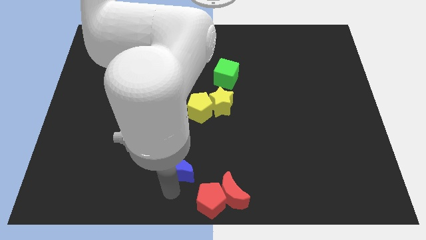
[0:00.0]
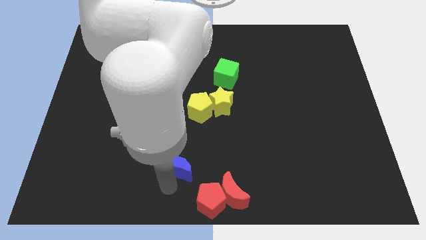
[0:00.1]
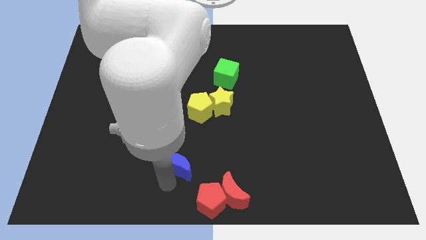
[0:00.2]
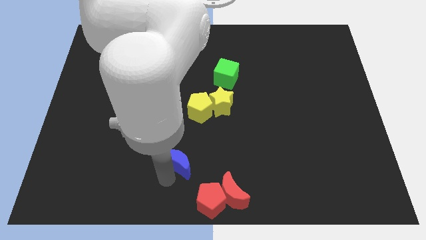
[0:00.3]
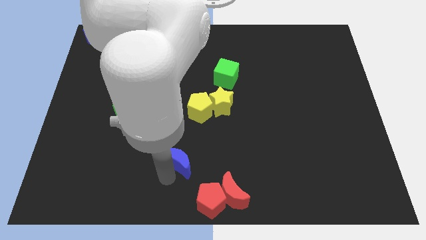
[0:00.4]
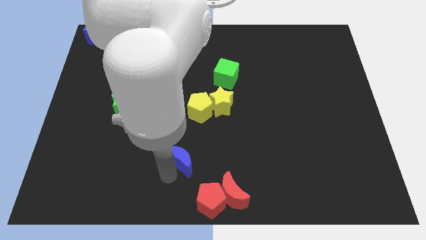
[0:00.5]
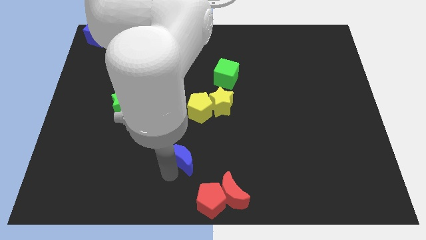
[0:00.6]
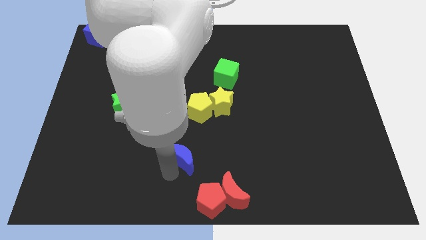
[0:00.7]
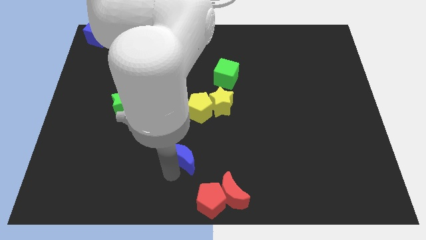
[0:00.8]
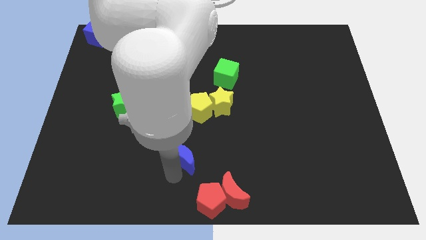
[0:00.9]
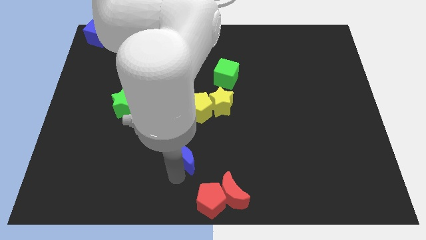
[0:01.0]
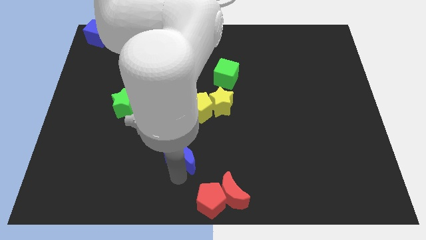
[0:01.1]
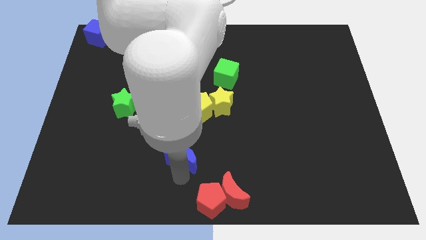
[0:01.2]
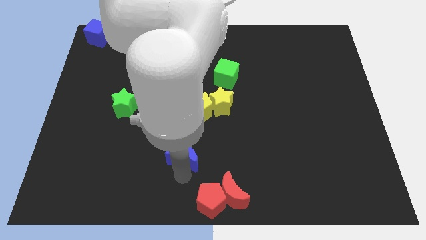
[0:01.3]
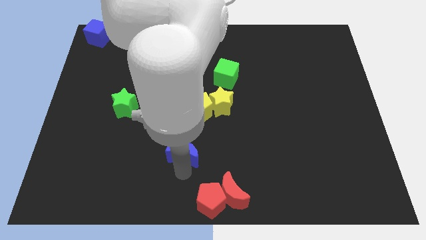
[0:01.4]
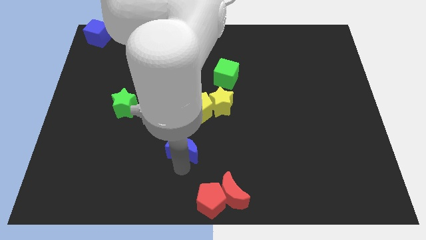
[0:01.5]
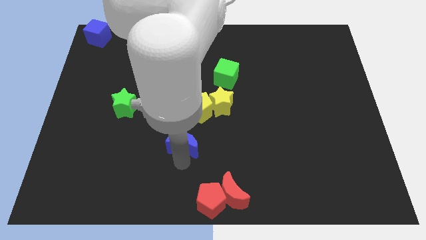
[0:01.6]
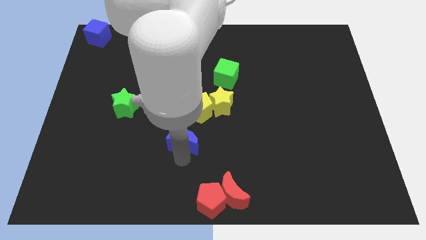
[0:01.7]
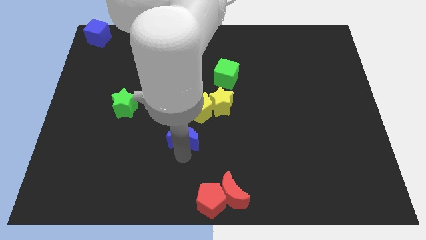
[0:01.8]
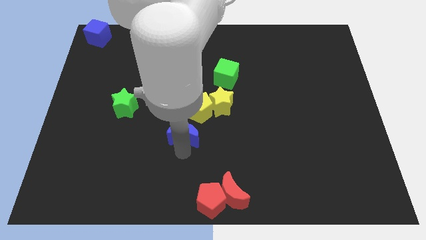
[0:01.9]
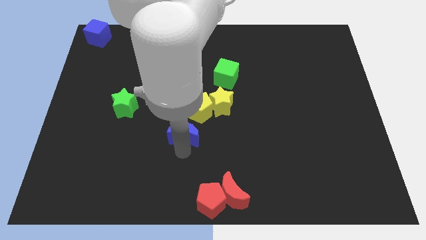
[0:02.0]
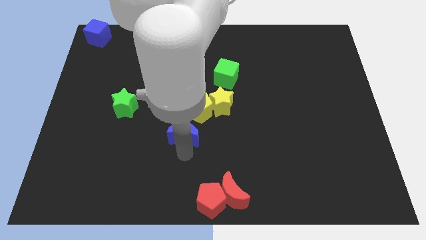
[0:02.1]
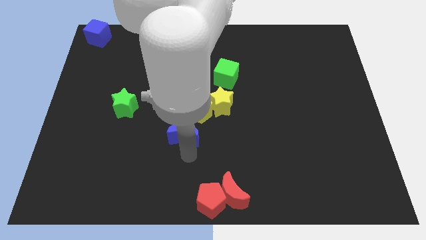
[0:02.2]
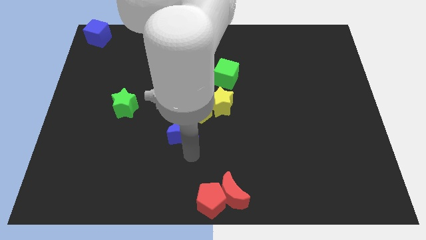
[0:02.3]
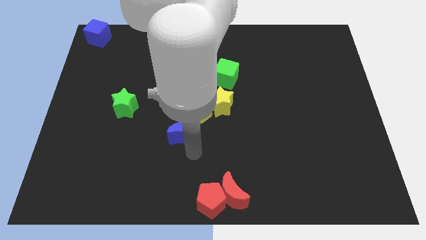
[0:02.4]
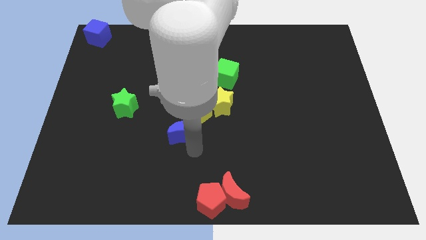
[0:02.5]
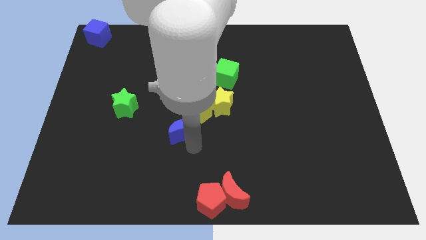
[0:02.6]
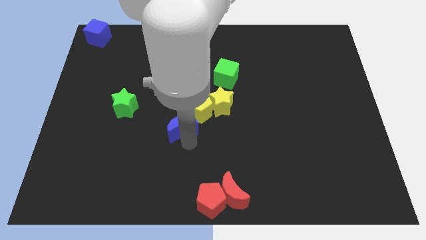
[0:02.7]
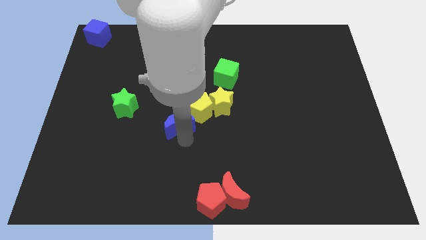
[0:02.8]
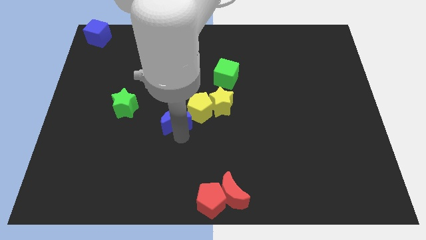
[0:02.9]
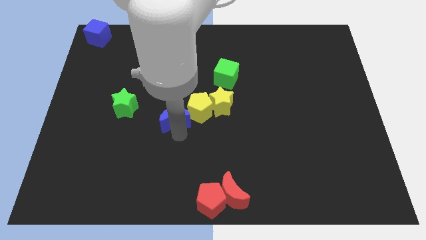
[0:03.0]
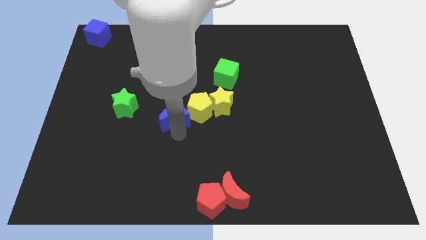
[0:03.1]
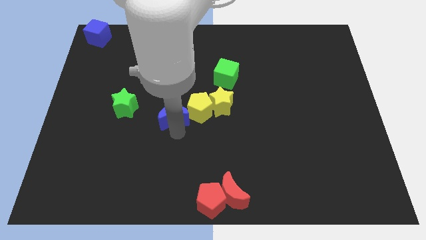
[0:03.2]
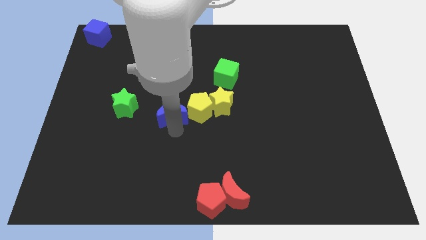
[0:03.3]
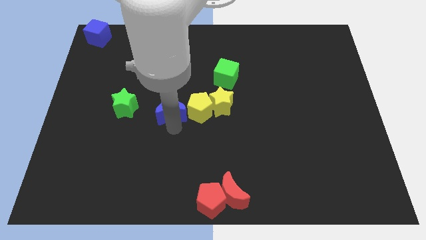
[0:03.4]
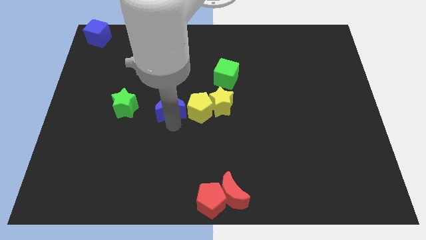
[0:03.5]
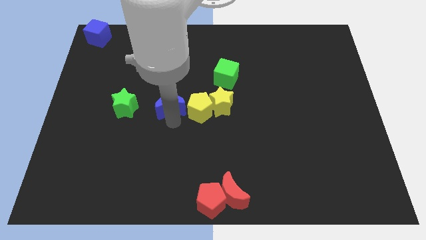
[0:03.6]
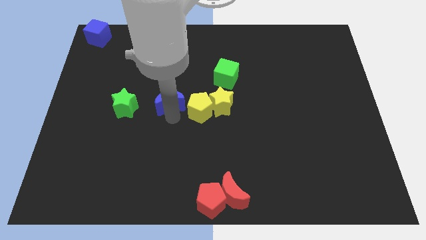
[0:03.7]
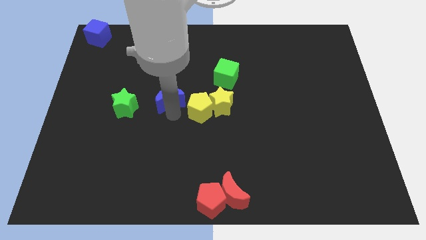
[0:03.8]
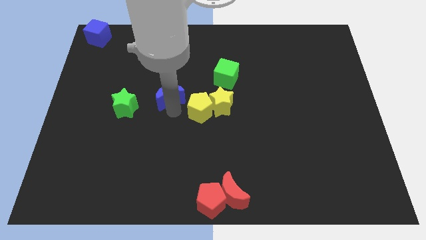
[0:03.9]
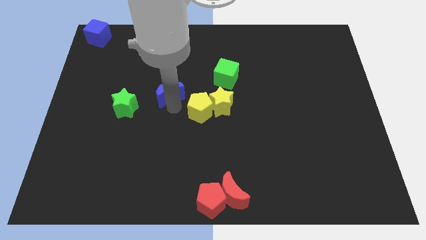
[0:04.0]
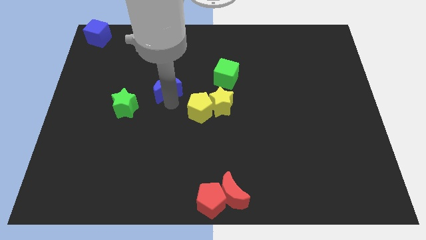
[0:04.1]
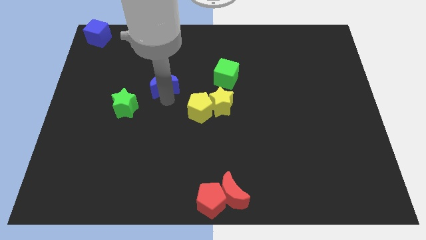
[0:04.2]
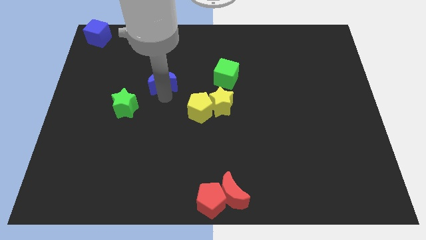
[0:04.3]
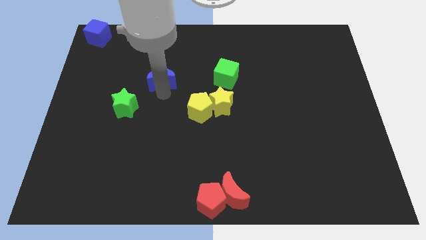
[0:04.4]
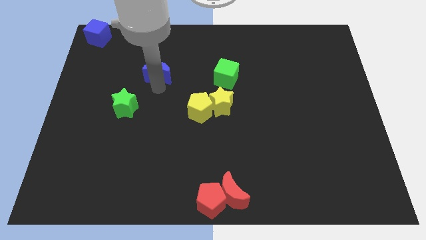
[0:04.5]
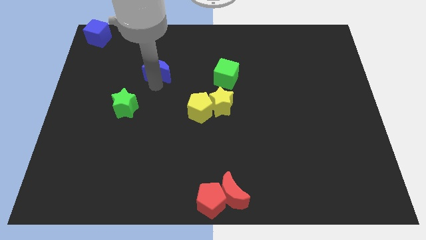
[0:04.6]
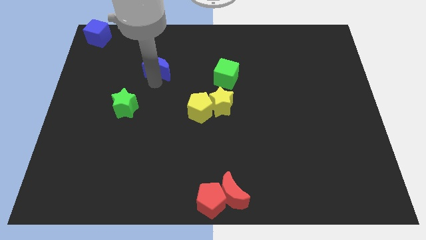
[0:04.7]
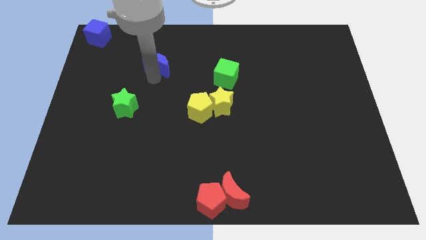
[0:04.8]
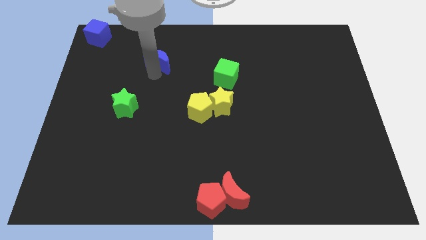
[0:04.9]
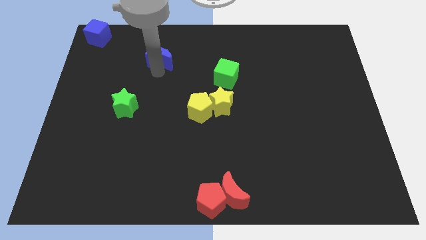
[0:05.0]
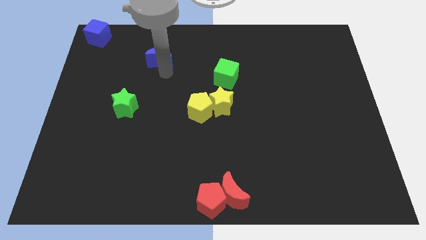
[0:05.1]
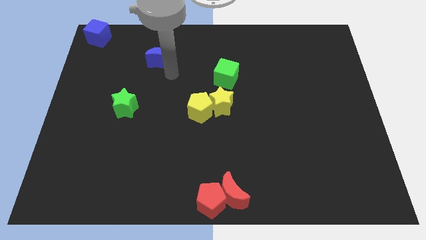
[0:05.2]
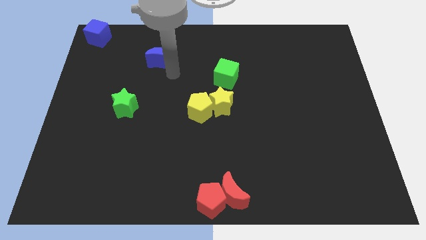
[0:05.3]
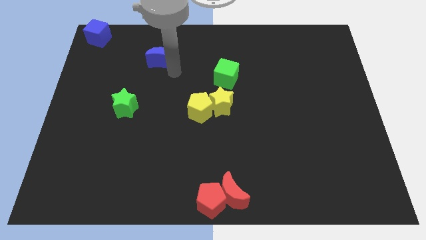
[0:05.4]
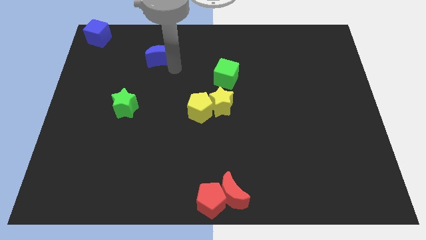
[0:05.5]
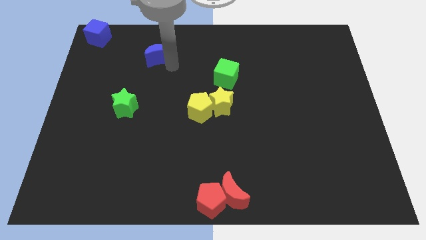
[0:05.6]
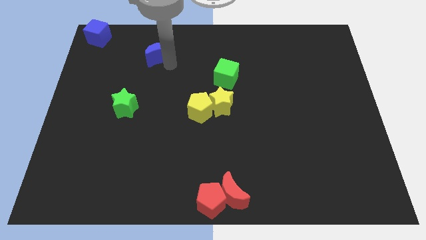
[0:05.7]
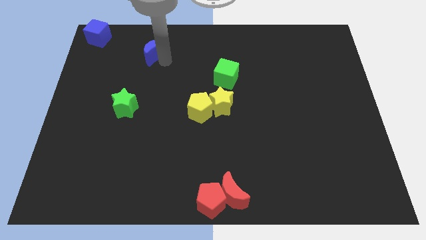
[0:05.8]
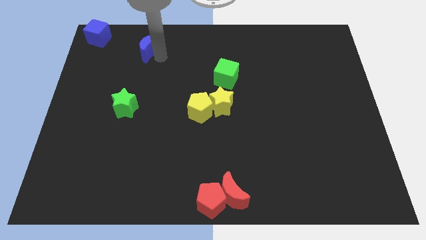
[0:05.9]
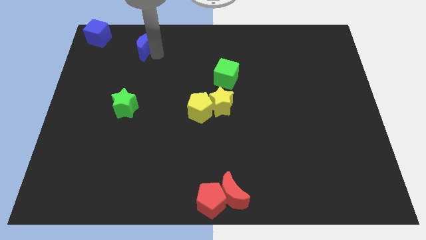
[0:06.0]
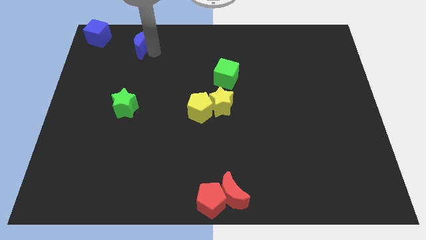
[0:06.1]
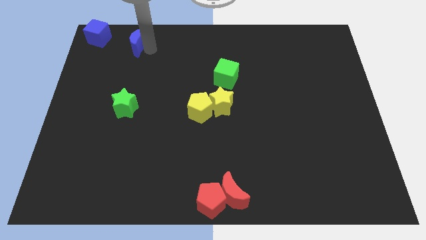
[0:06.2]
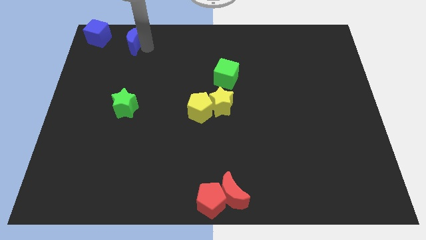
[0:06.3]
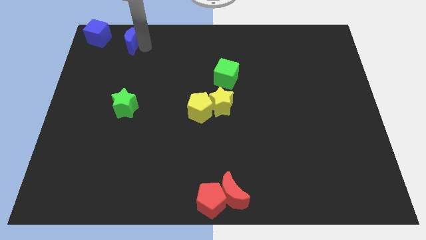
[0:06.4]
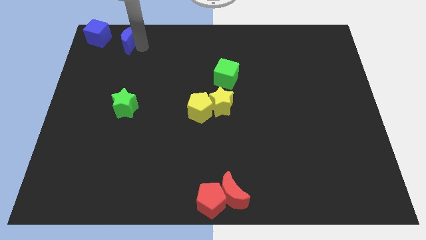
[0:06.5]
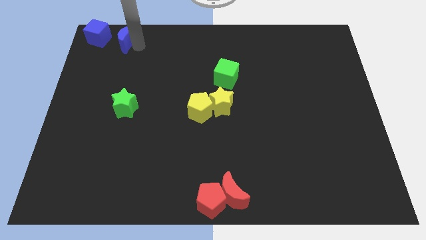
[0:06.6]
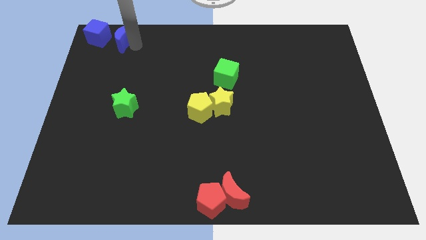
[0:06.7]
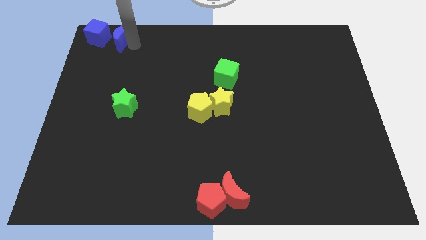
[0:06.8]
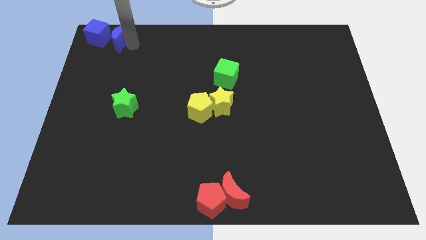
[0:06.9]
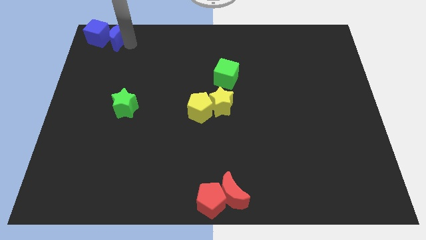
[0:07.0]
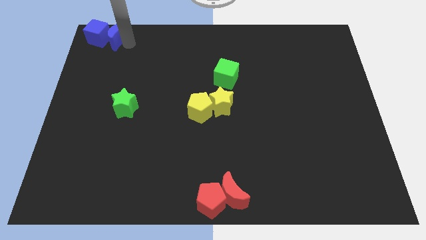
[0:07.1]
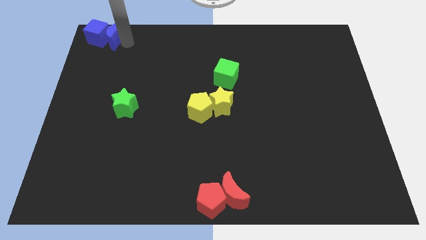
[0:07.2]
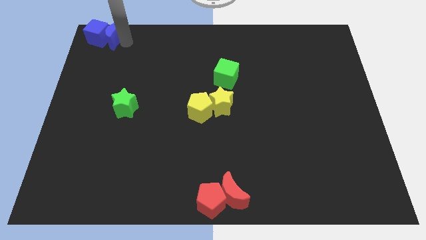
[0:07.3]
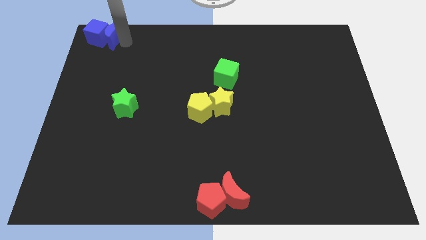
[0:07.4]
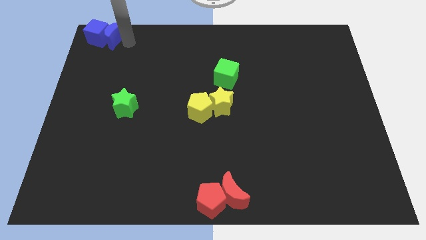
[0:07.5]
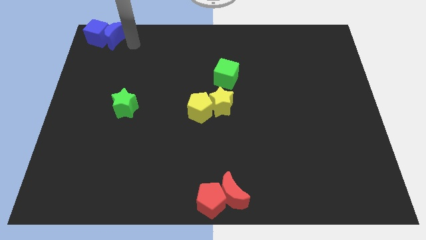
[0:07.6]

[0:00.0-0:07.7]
place the blue crescent right to the blue cube

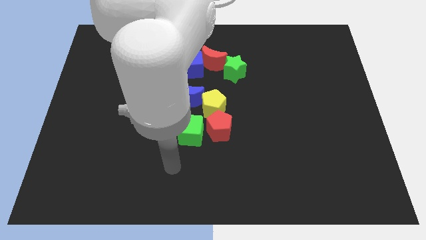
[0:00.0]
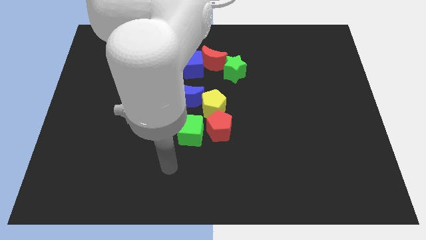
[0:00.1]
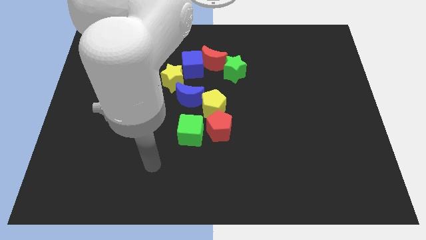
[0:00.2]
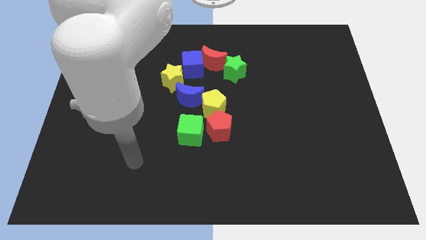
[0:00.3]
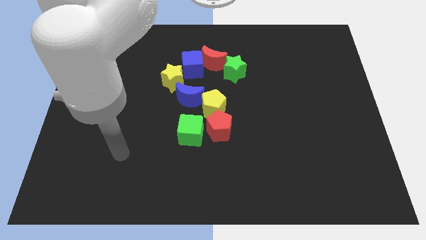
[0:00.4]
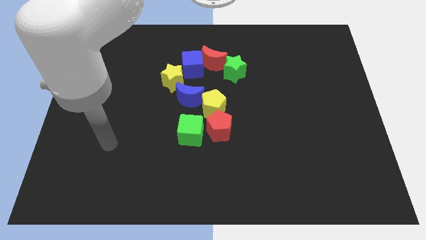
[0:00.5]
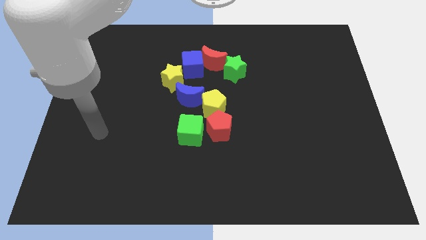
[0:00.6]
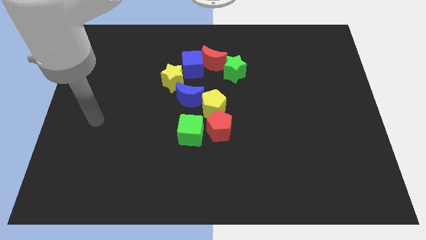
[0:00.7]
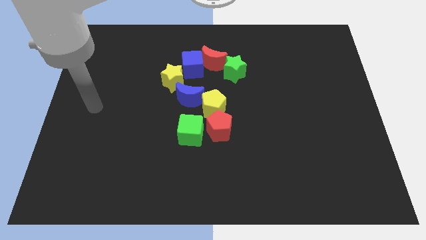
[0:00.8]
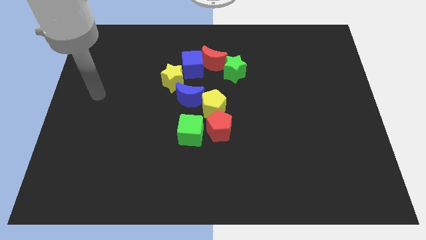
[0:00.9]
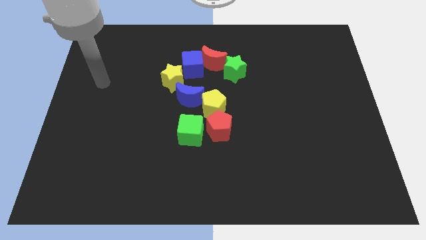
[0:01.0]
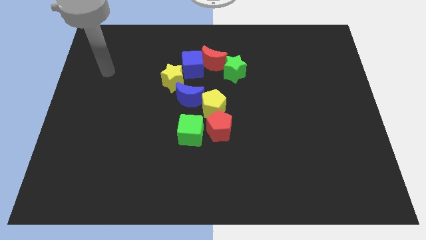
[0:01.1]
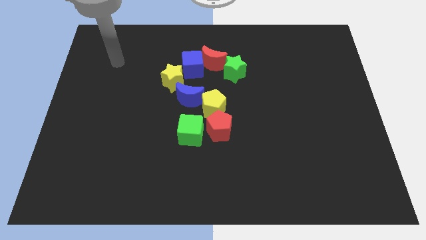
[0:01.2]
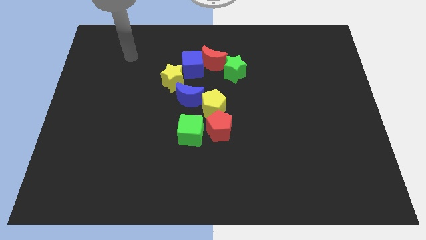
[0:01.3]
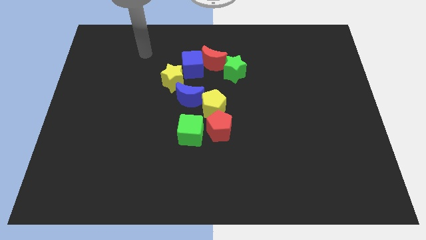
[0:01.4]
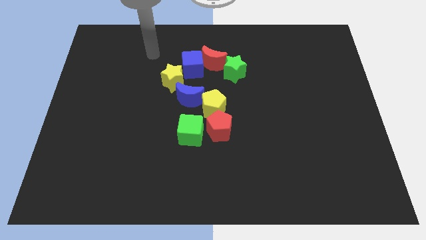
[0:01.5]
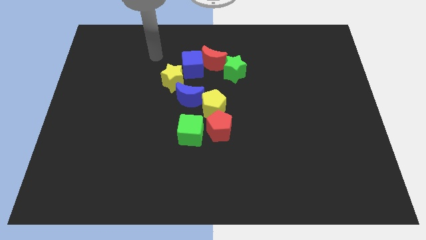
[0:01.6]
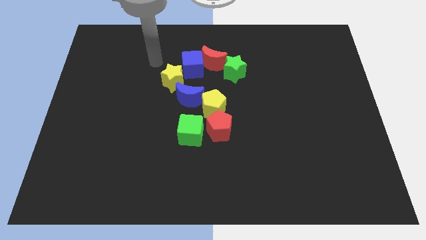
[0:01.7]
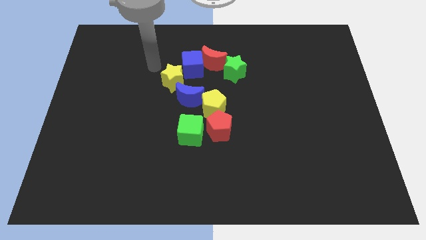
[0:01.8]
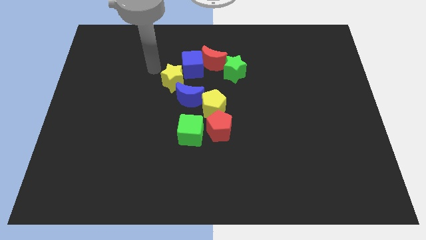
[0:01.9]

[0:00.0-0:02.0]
move the arm towards the yellow star
